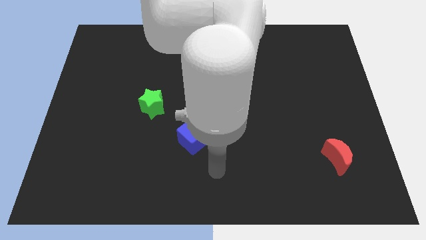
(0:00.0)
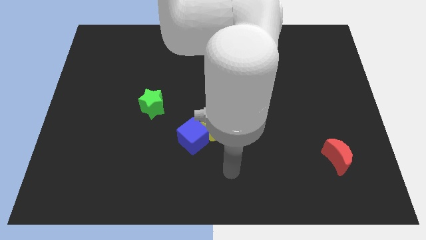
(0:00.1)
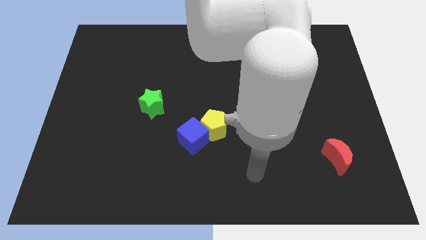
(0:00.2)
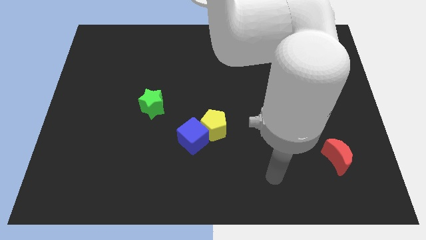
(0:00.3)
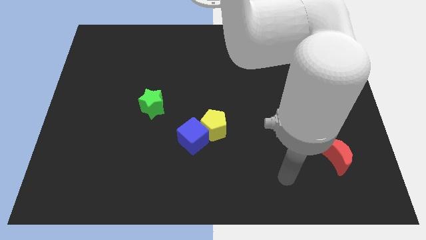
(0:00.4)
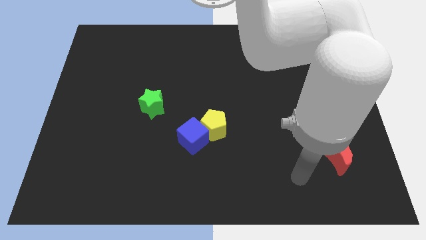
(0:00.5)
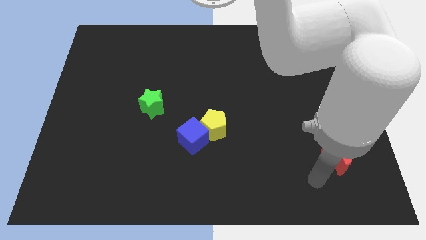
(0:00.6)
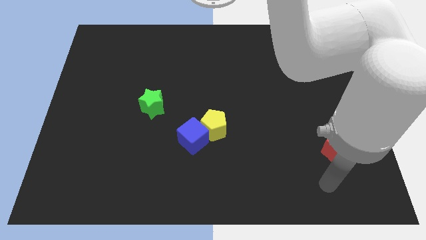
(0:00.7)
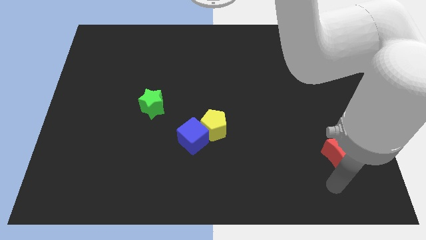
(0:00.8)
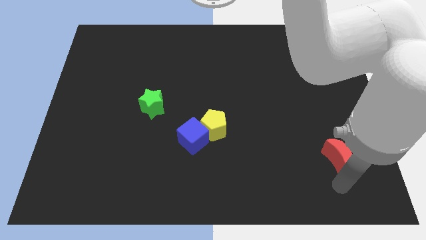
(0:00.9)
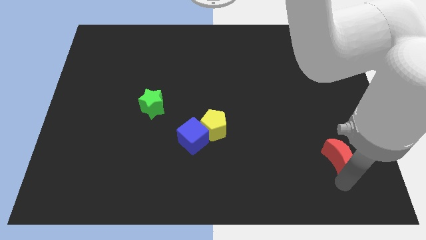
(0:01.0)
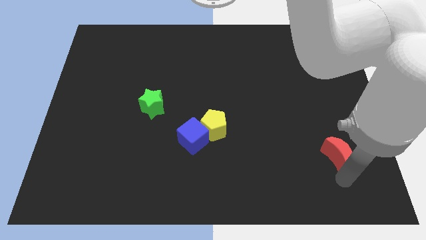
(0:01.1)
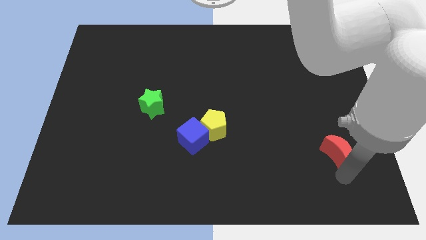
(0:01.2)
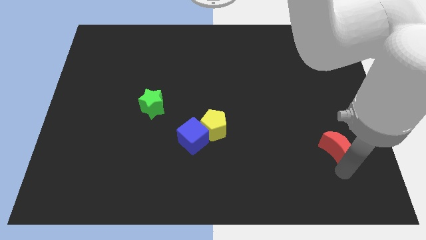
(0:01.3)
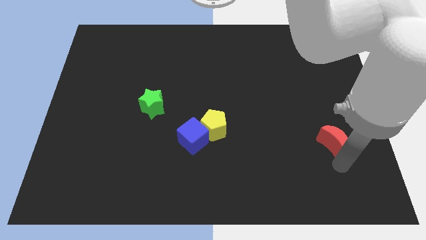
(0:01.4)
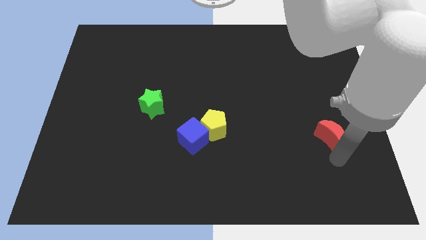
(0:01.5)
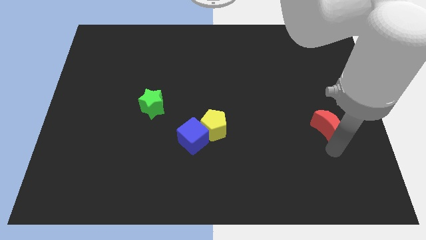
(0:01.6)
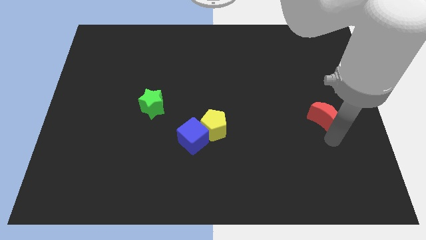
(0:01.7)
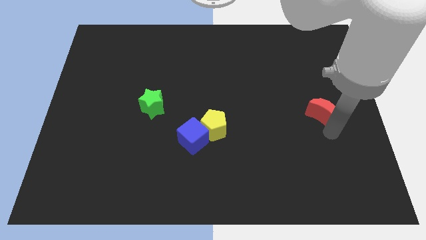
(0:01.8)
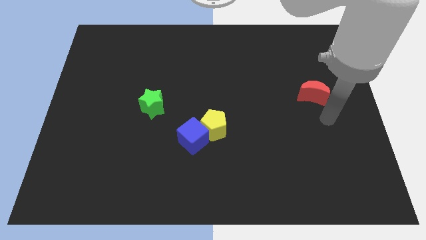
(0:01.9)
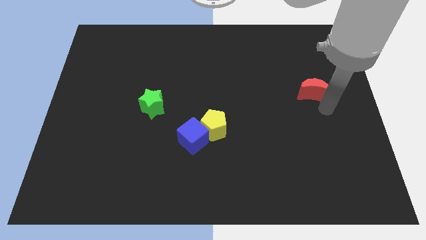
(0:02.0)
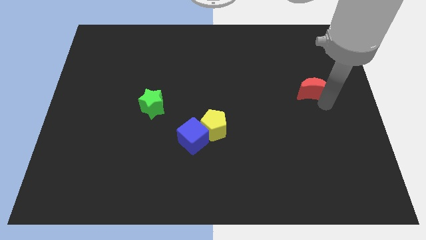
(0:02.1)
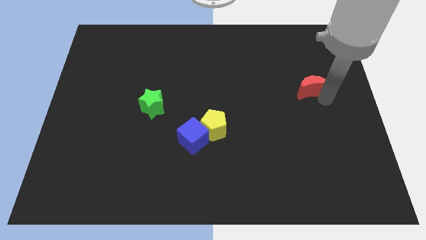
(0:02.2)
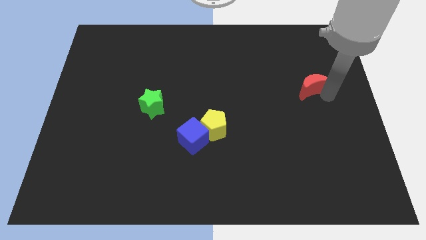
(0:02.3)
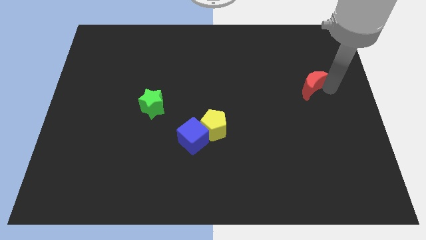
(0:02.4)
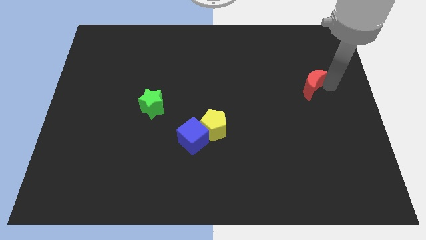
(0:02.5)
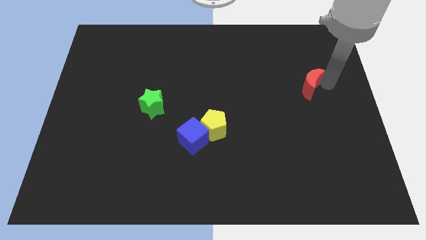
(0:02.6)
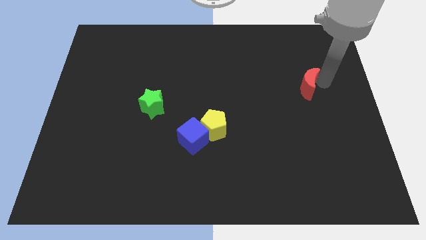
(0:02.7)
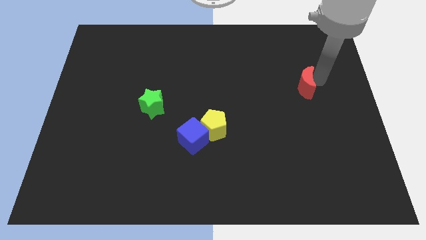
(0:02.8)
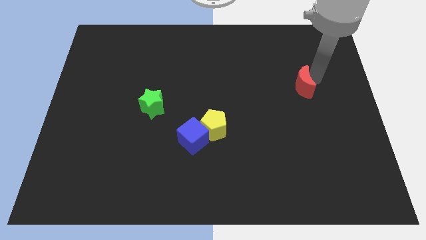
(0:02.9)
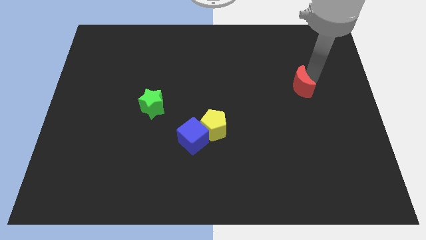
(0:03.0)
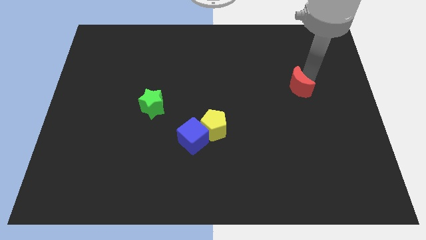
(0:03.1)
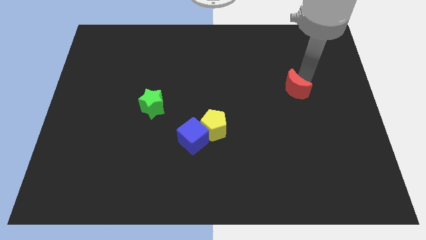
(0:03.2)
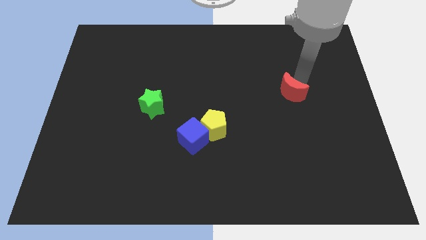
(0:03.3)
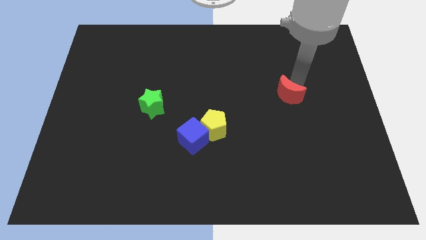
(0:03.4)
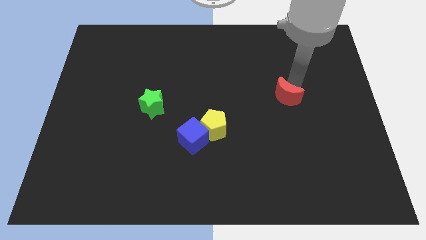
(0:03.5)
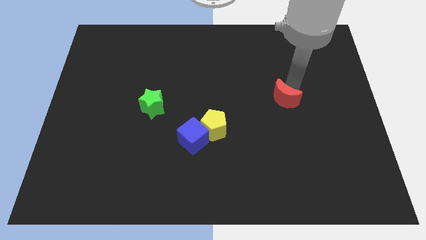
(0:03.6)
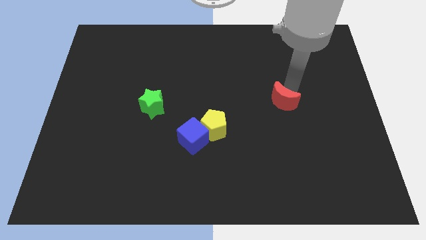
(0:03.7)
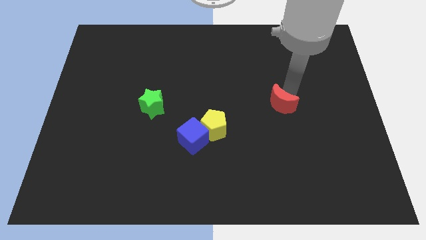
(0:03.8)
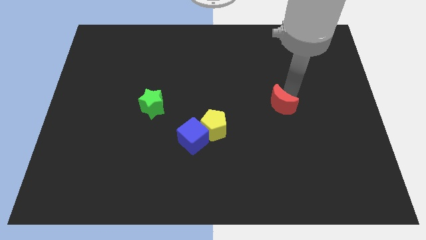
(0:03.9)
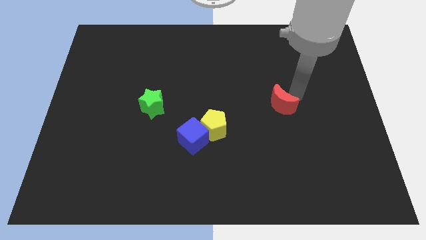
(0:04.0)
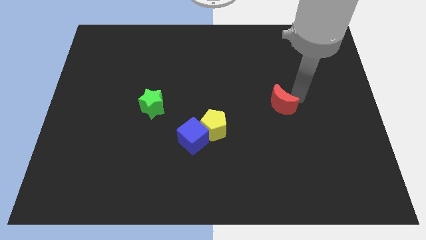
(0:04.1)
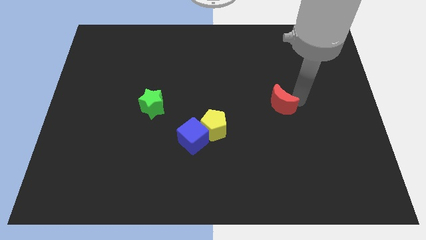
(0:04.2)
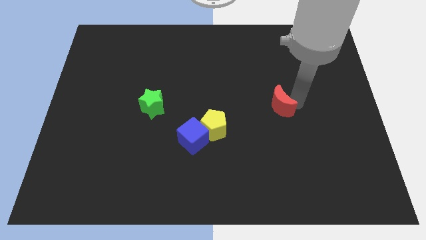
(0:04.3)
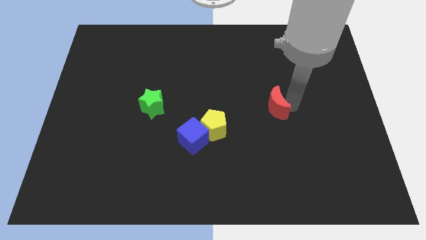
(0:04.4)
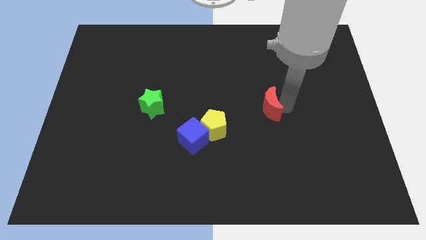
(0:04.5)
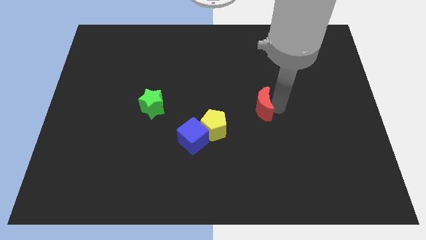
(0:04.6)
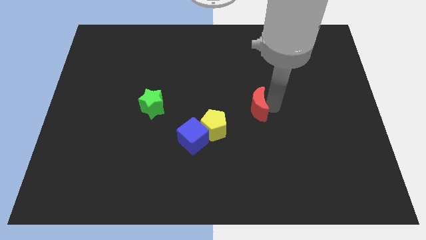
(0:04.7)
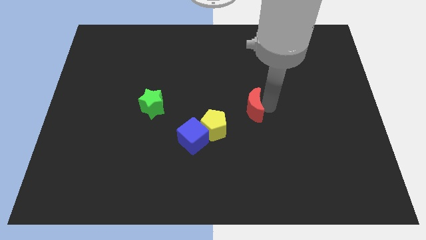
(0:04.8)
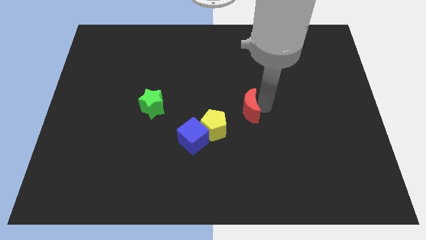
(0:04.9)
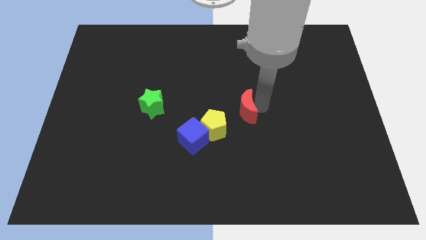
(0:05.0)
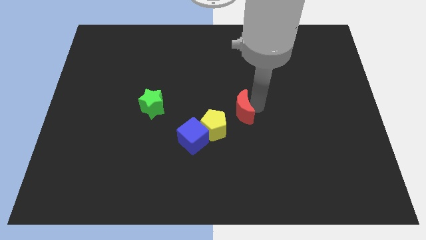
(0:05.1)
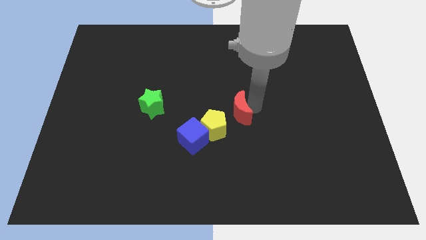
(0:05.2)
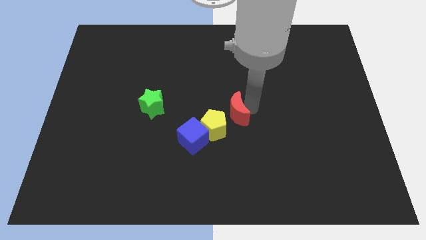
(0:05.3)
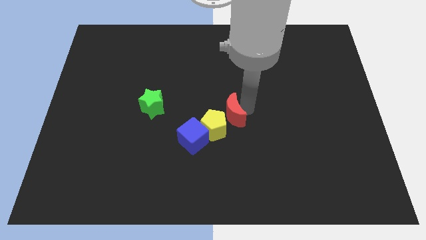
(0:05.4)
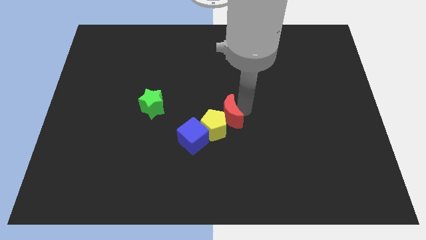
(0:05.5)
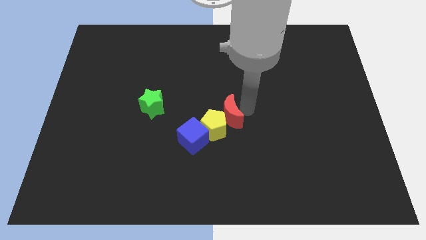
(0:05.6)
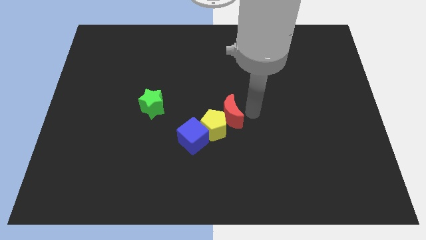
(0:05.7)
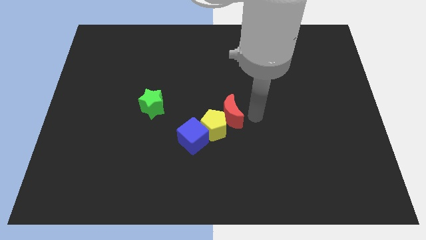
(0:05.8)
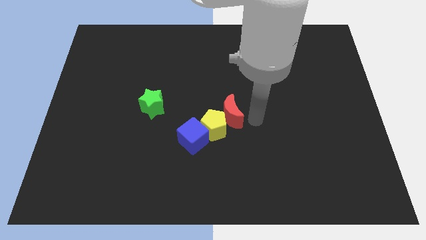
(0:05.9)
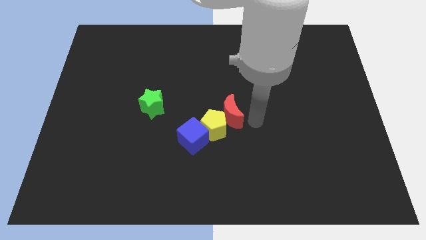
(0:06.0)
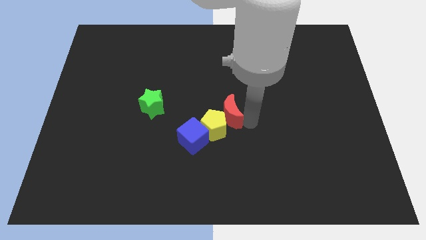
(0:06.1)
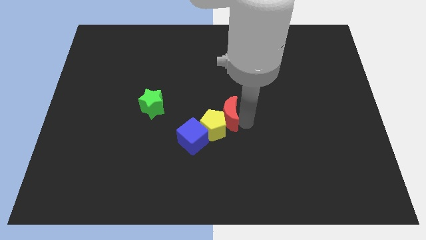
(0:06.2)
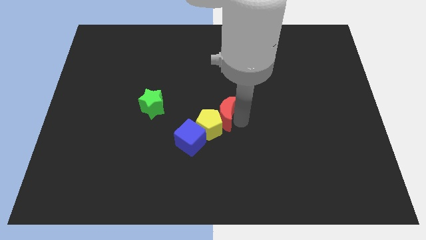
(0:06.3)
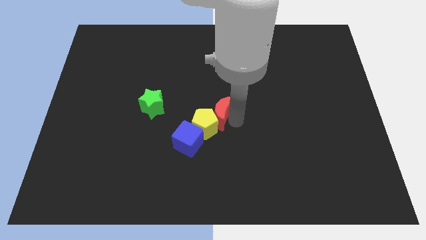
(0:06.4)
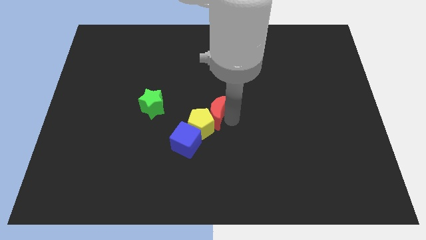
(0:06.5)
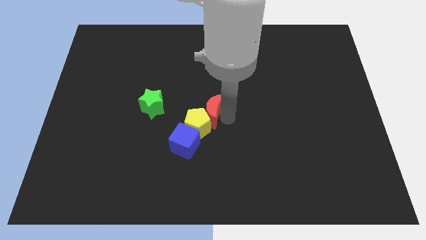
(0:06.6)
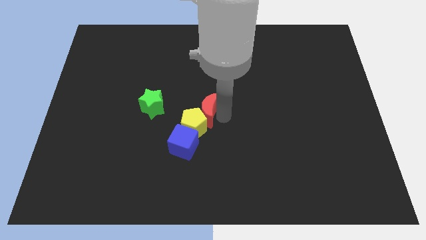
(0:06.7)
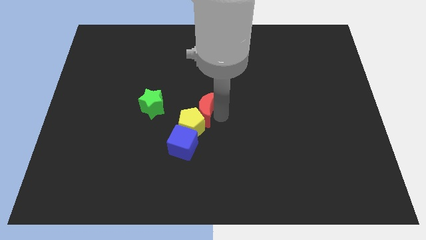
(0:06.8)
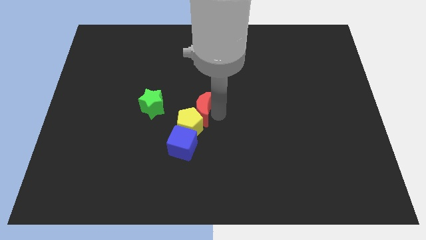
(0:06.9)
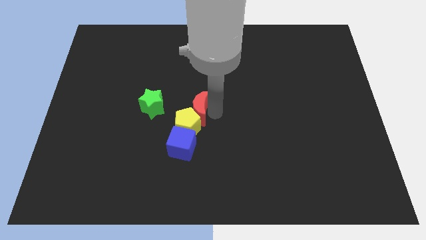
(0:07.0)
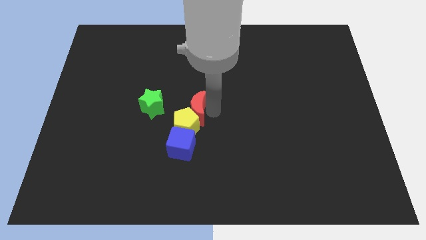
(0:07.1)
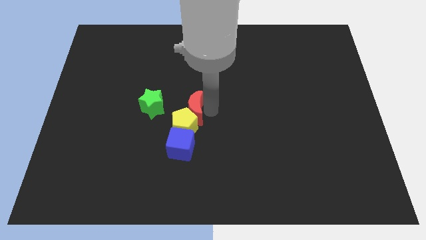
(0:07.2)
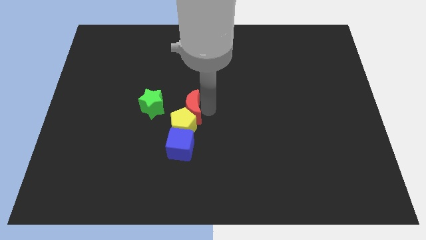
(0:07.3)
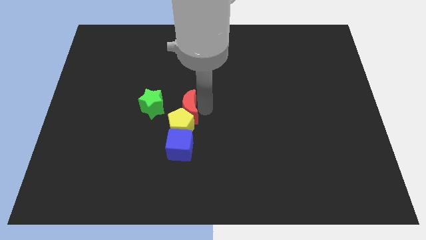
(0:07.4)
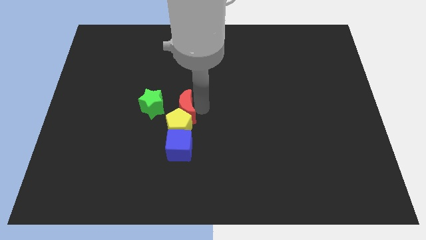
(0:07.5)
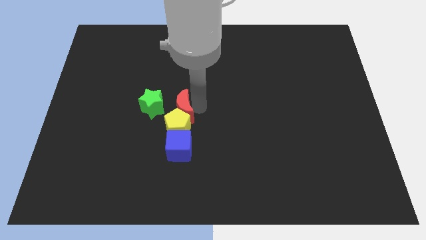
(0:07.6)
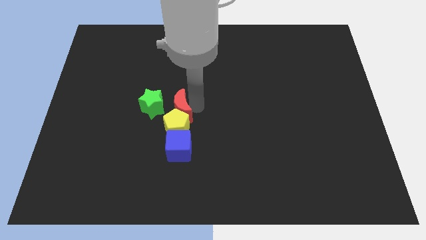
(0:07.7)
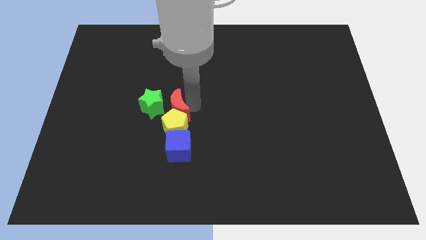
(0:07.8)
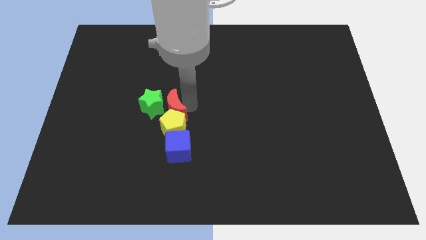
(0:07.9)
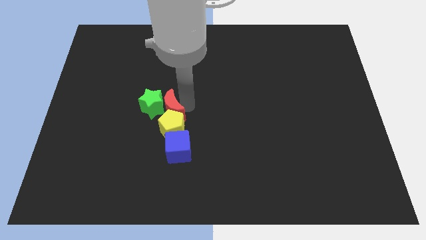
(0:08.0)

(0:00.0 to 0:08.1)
push the red block next to the star

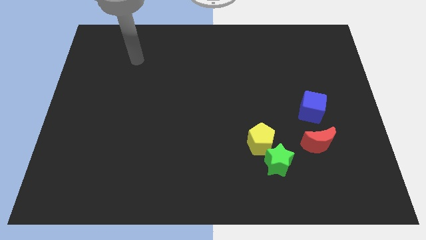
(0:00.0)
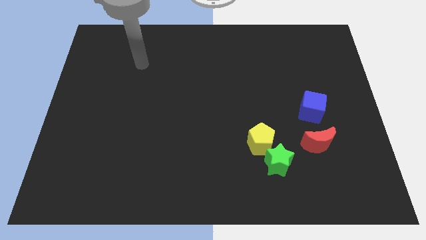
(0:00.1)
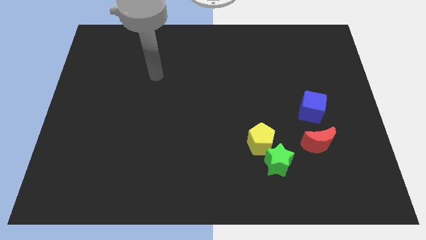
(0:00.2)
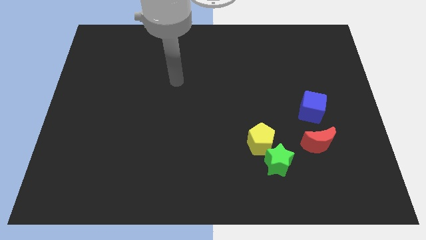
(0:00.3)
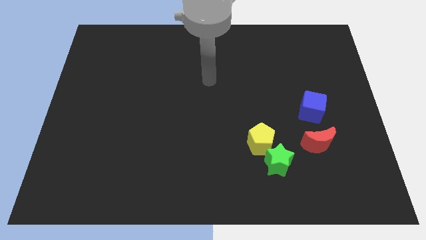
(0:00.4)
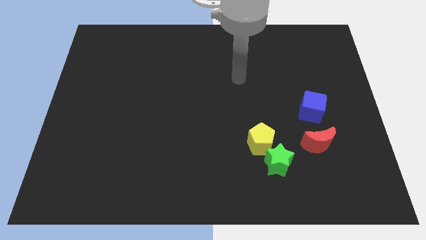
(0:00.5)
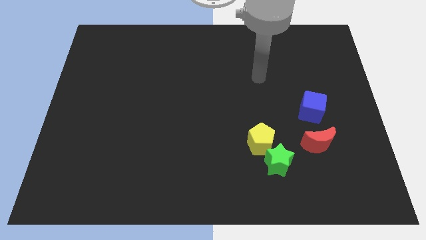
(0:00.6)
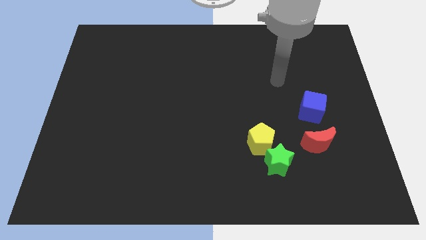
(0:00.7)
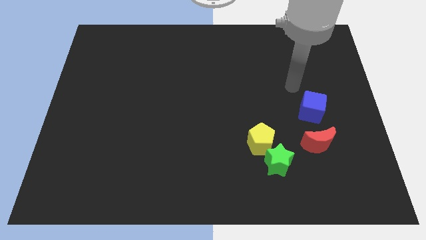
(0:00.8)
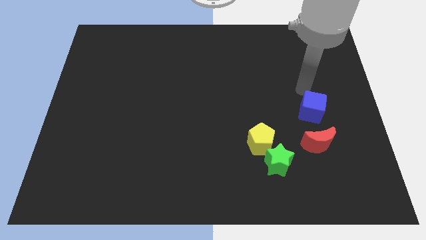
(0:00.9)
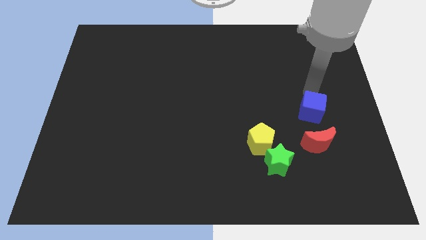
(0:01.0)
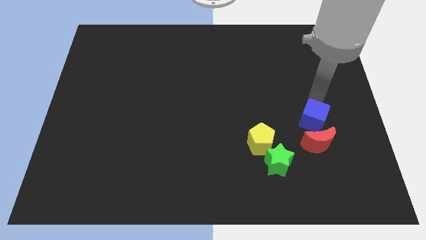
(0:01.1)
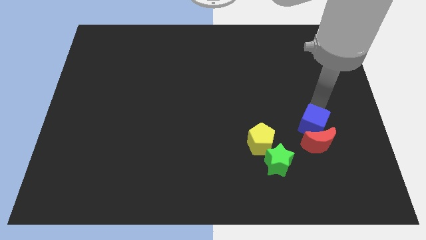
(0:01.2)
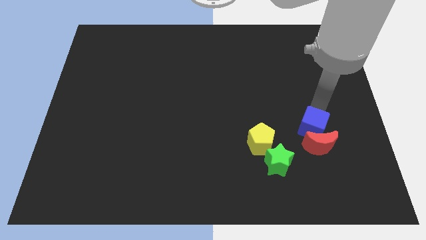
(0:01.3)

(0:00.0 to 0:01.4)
put the blue block towards the red moon
